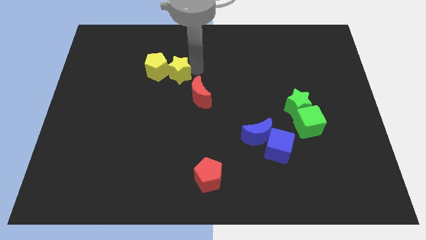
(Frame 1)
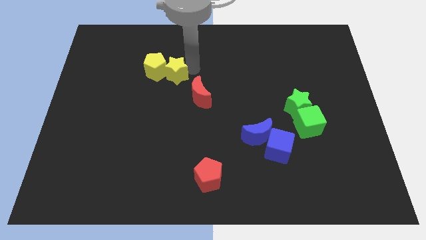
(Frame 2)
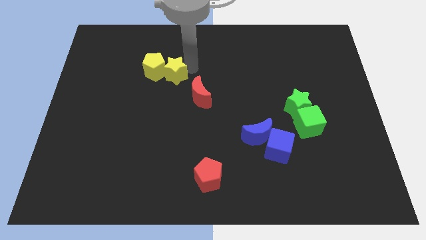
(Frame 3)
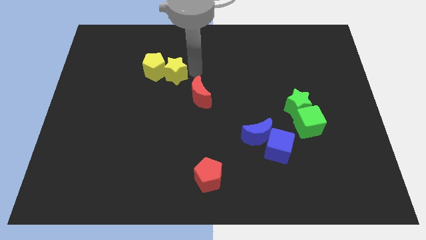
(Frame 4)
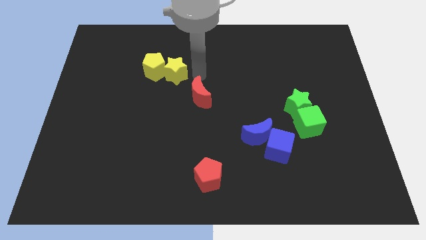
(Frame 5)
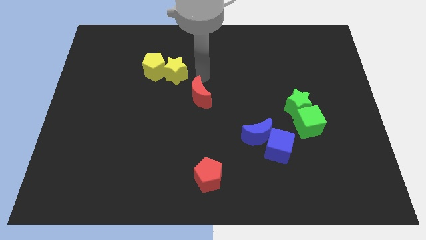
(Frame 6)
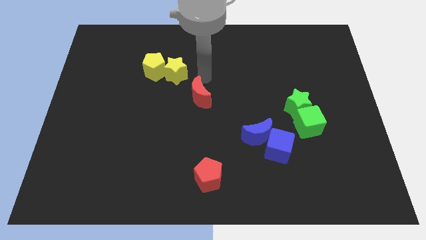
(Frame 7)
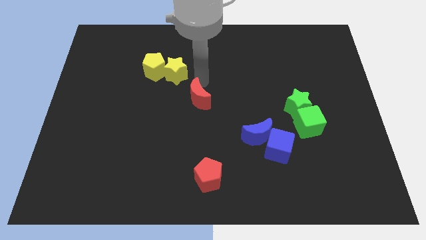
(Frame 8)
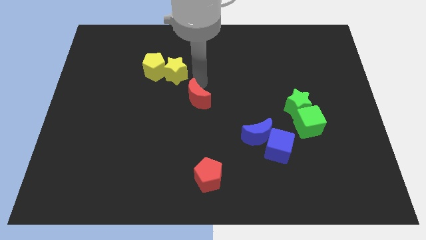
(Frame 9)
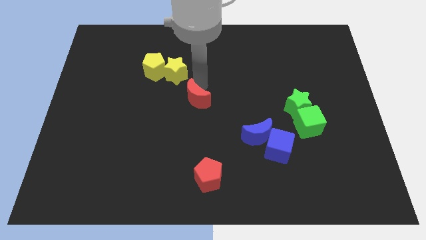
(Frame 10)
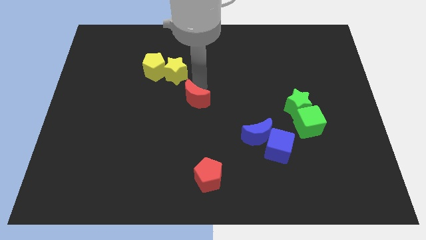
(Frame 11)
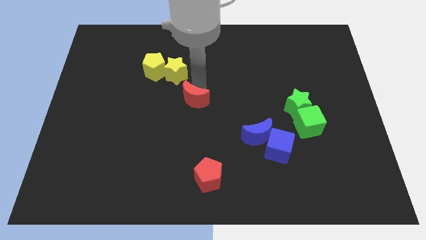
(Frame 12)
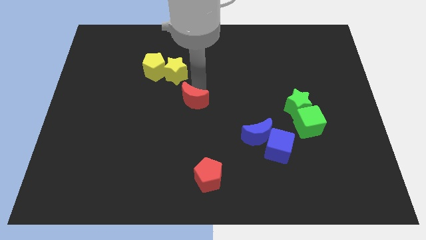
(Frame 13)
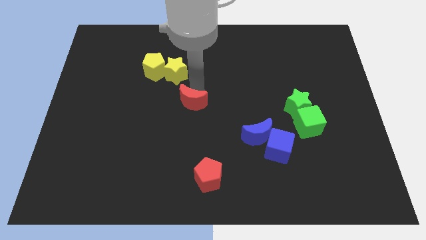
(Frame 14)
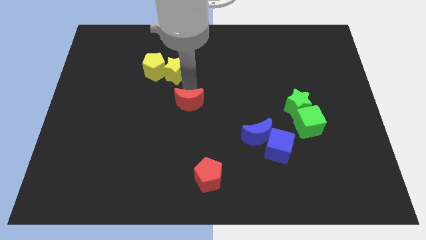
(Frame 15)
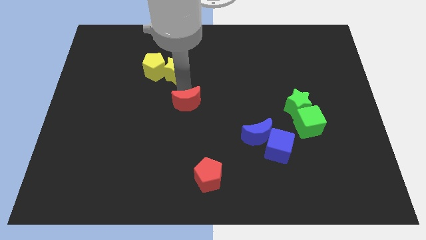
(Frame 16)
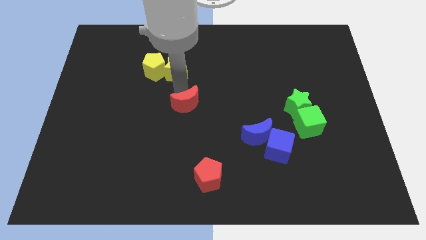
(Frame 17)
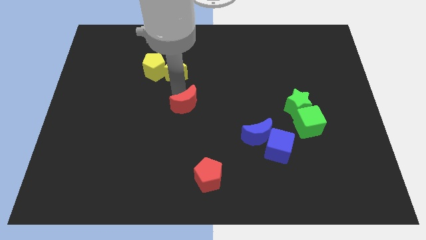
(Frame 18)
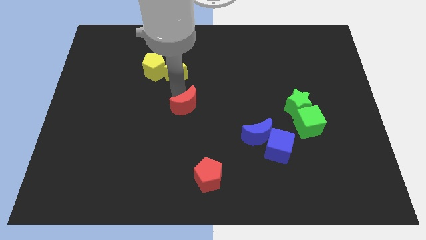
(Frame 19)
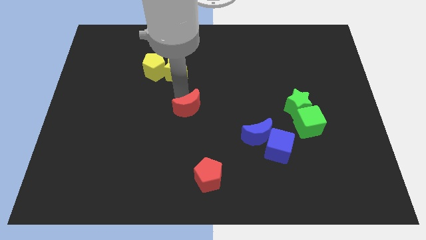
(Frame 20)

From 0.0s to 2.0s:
push red moon downwards

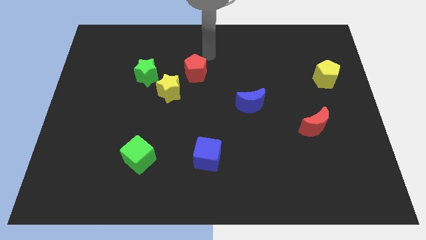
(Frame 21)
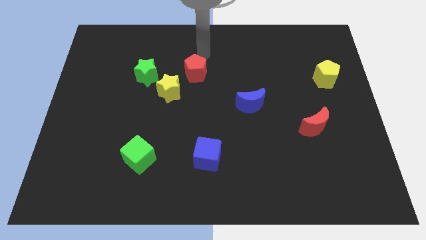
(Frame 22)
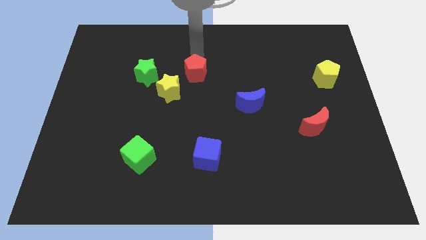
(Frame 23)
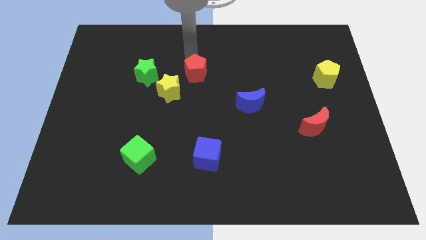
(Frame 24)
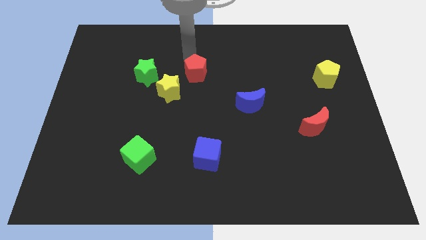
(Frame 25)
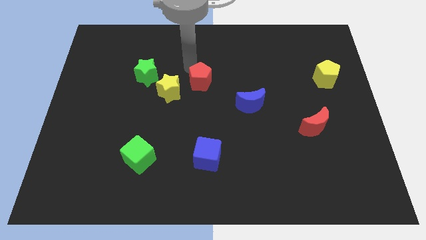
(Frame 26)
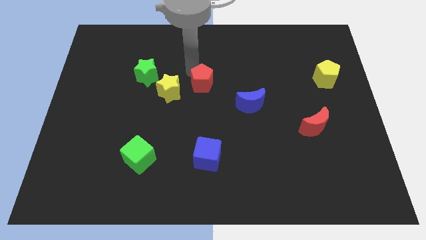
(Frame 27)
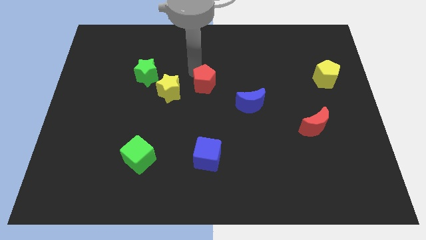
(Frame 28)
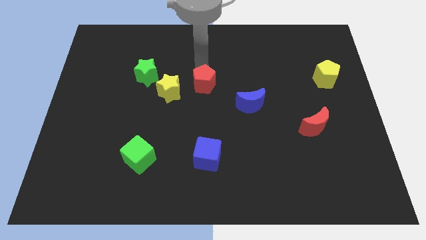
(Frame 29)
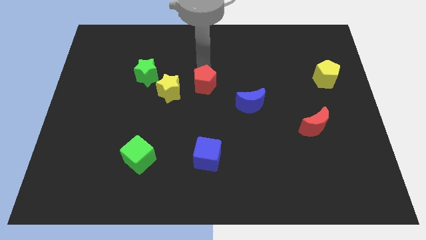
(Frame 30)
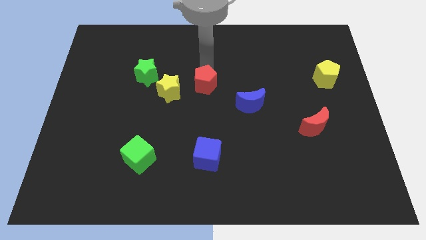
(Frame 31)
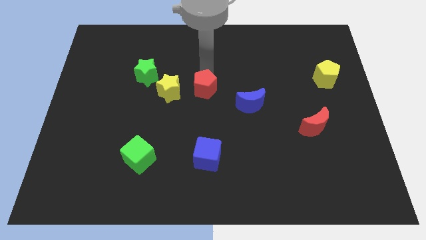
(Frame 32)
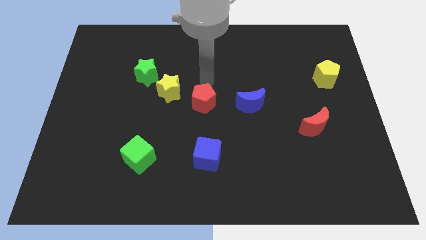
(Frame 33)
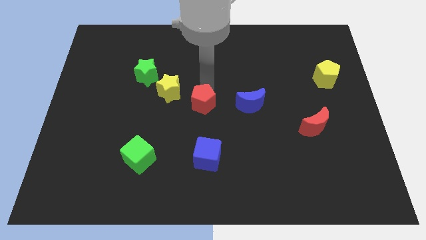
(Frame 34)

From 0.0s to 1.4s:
place the red pentagon left to the blue moon

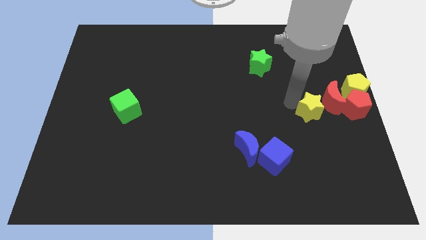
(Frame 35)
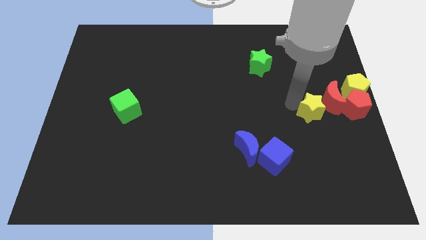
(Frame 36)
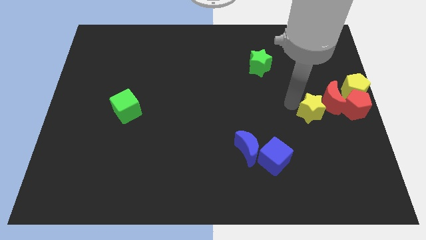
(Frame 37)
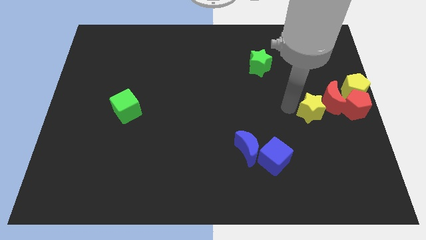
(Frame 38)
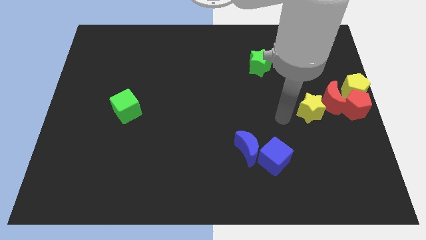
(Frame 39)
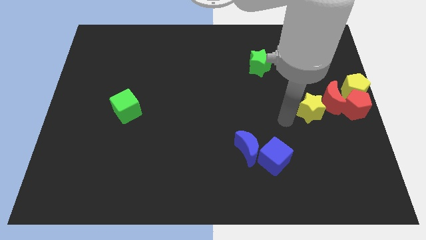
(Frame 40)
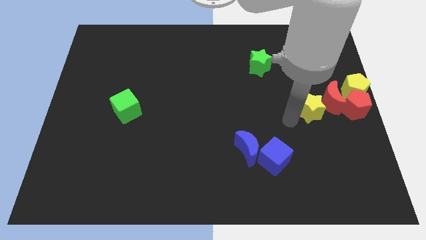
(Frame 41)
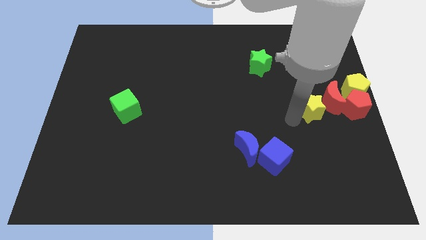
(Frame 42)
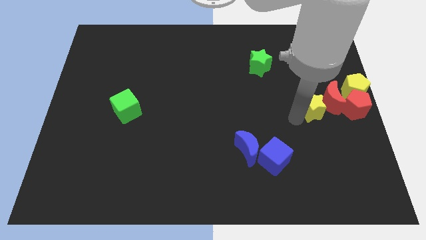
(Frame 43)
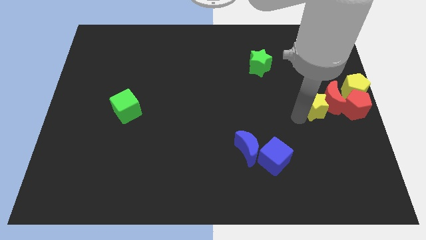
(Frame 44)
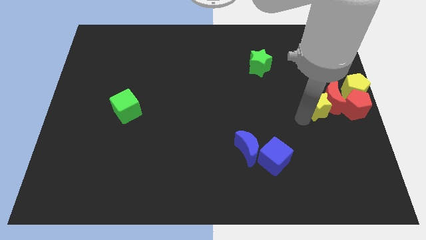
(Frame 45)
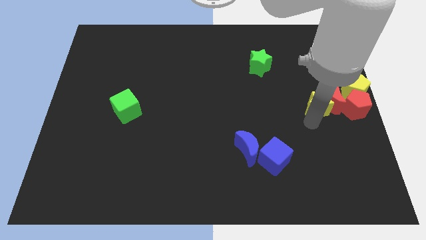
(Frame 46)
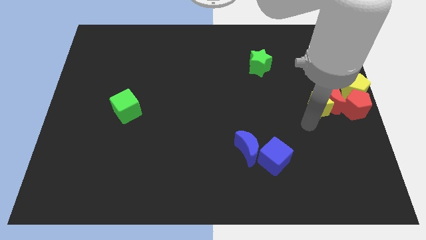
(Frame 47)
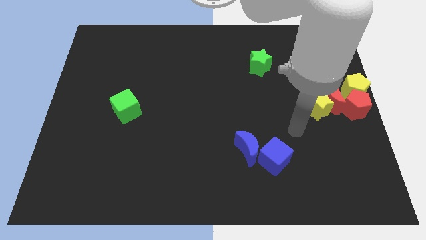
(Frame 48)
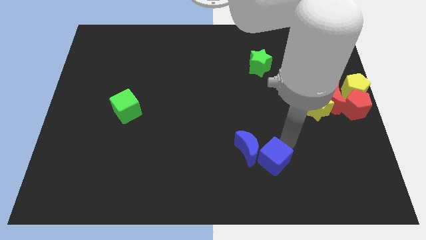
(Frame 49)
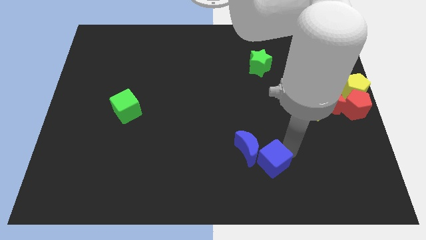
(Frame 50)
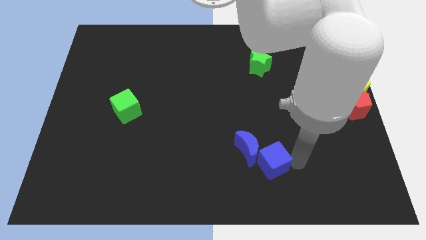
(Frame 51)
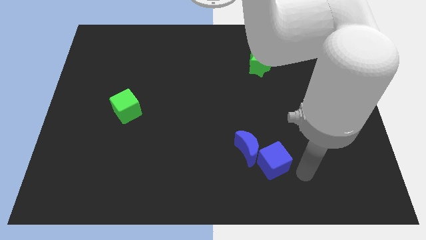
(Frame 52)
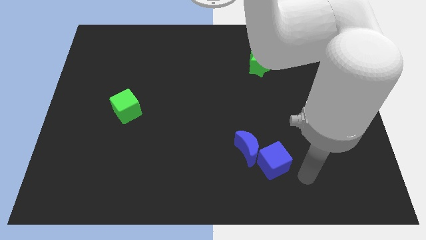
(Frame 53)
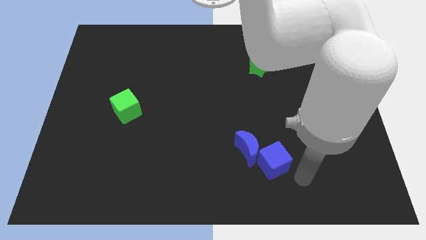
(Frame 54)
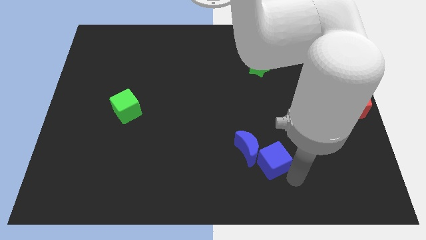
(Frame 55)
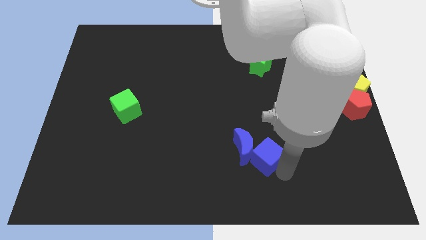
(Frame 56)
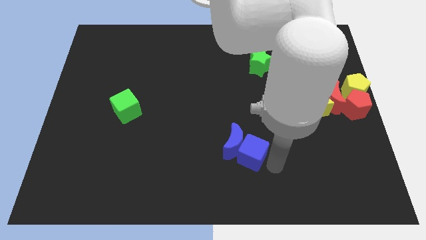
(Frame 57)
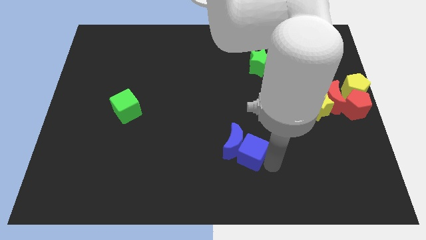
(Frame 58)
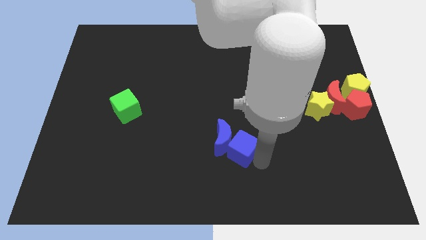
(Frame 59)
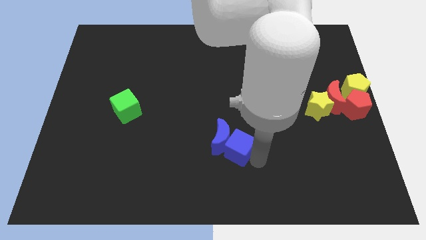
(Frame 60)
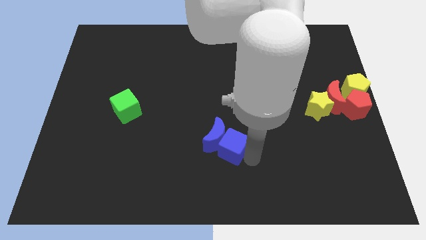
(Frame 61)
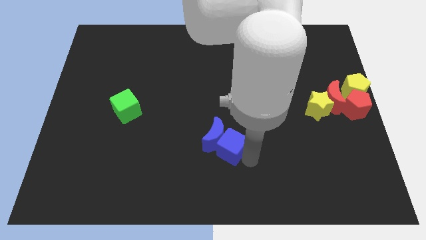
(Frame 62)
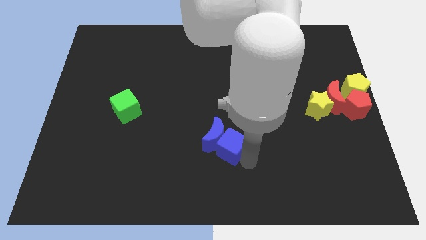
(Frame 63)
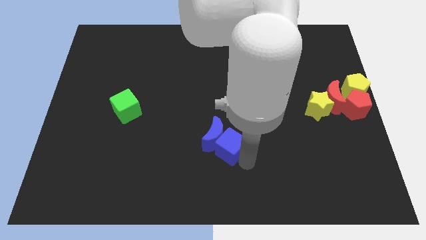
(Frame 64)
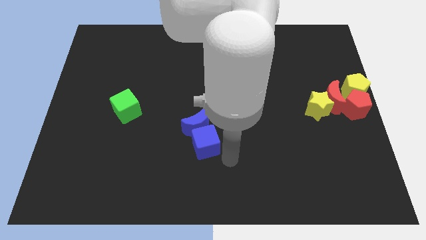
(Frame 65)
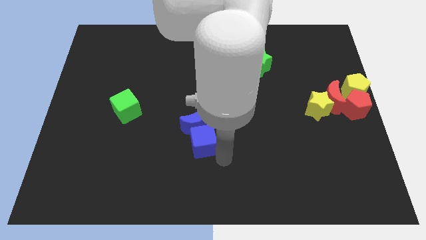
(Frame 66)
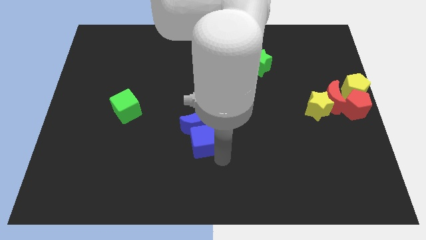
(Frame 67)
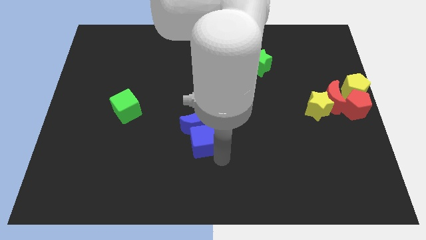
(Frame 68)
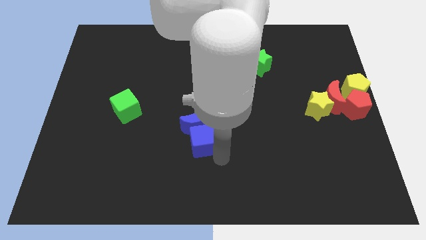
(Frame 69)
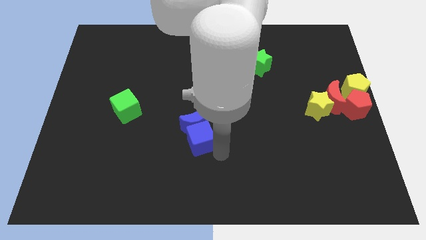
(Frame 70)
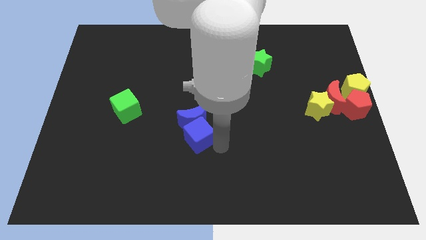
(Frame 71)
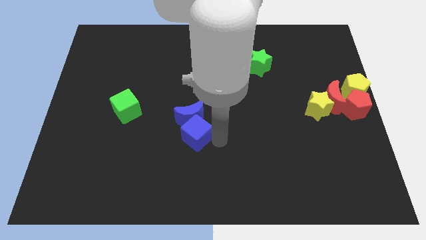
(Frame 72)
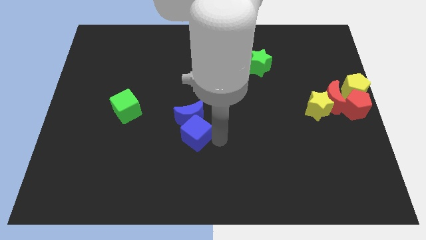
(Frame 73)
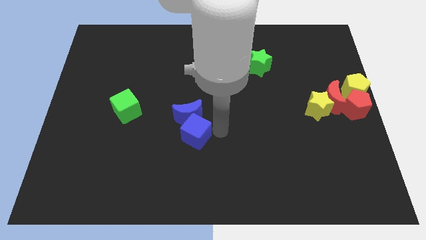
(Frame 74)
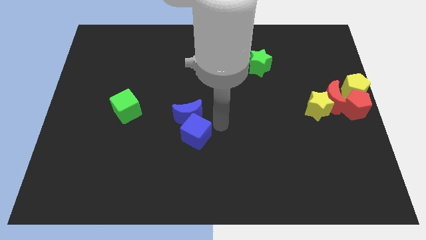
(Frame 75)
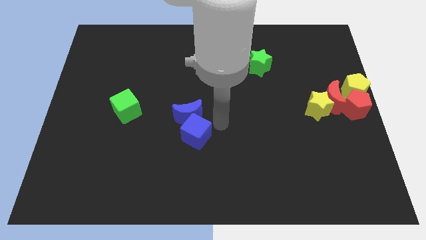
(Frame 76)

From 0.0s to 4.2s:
push the blue blocks towards the center of the board

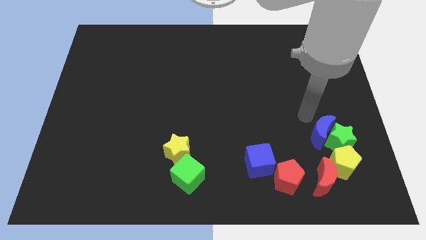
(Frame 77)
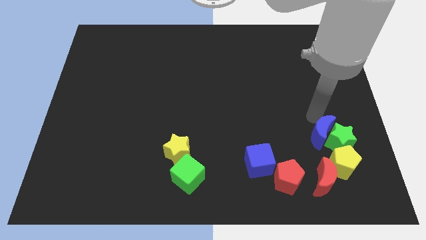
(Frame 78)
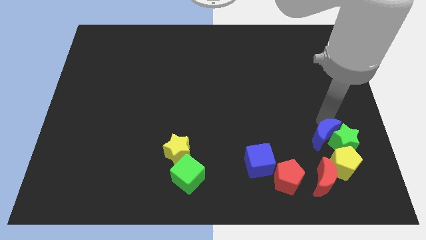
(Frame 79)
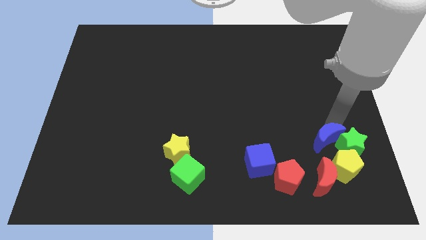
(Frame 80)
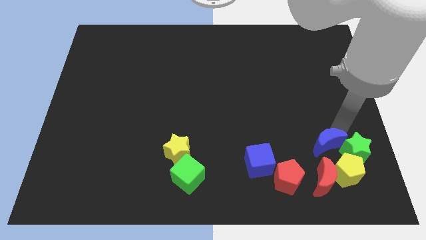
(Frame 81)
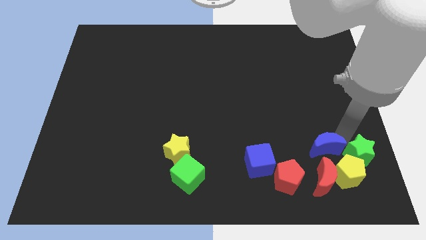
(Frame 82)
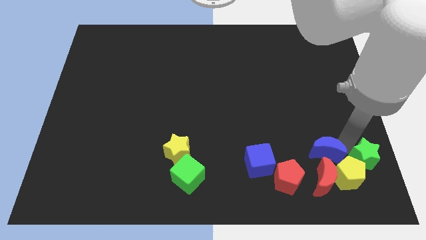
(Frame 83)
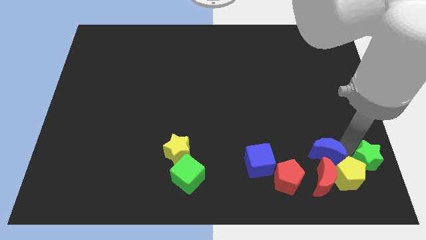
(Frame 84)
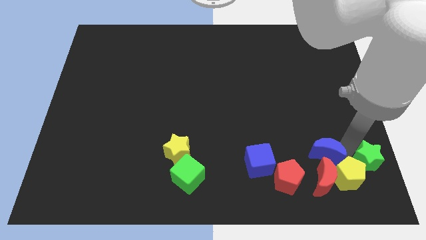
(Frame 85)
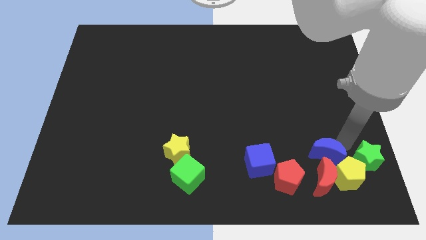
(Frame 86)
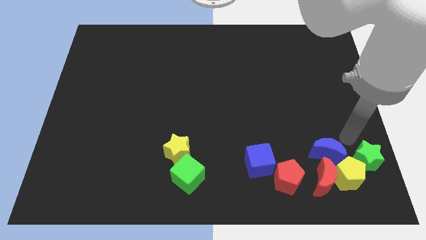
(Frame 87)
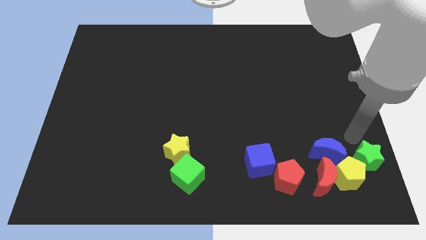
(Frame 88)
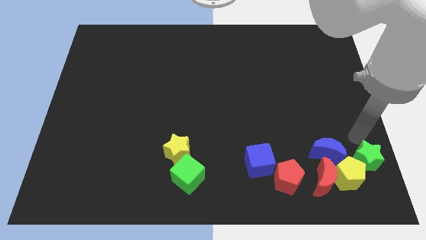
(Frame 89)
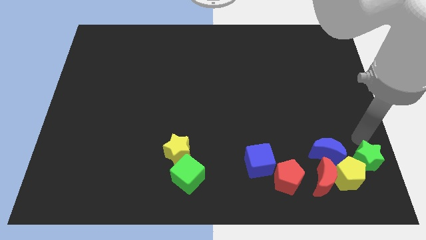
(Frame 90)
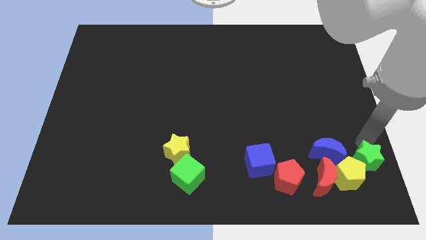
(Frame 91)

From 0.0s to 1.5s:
put the blue crescent to the right of the blue cube
